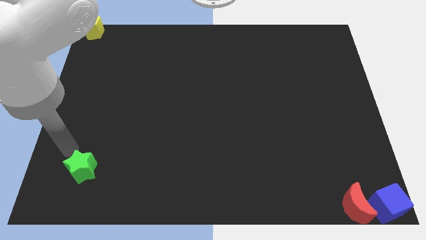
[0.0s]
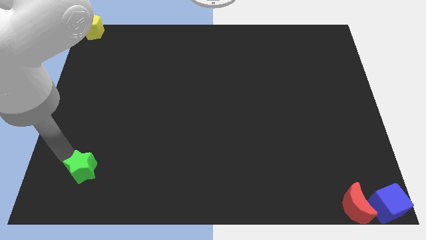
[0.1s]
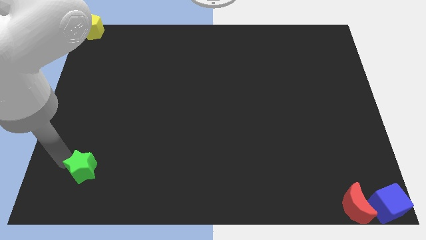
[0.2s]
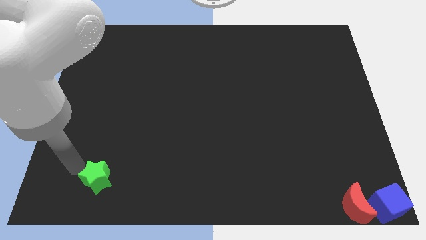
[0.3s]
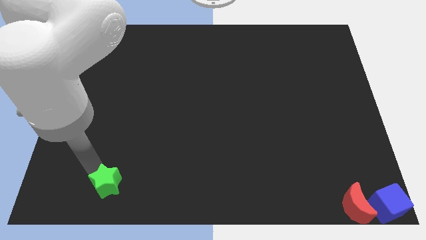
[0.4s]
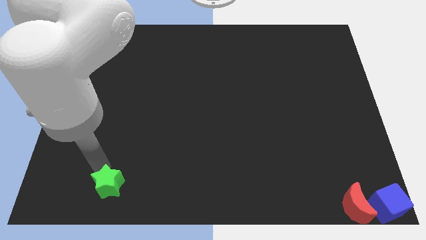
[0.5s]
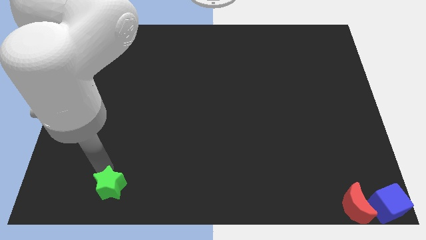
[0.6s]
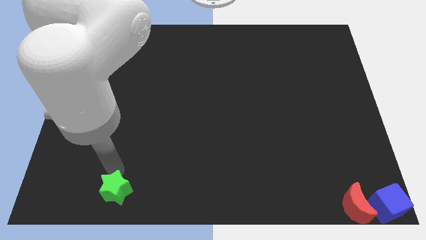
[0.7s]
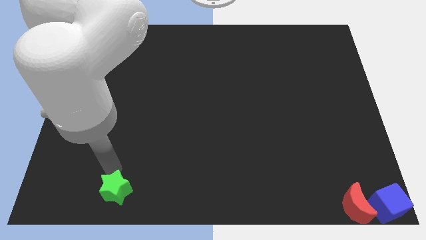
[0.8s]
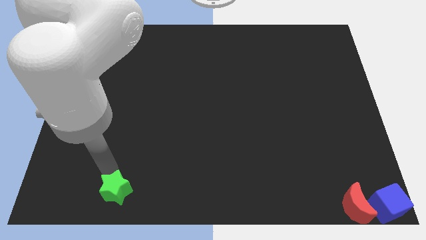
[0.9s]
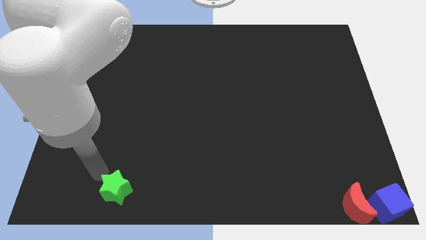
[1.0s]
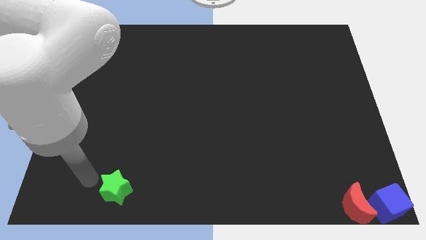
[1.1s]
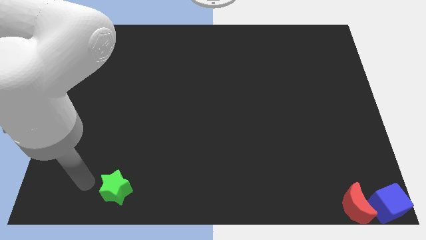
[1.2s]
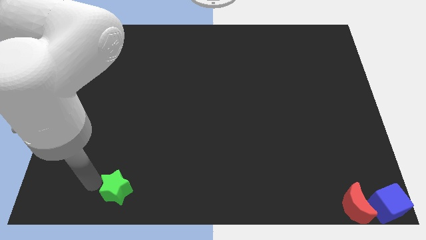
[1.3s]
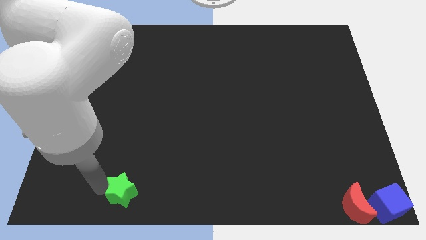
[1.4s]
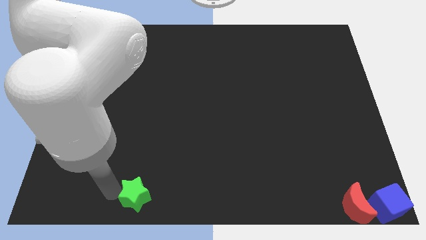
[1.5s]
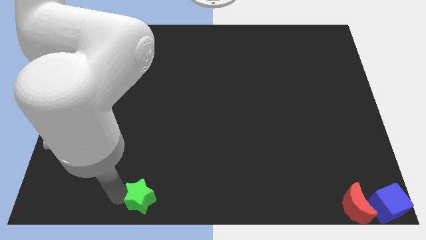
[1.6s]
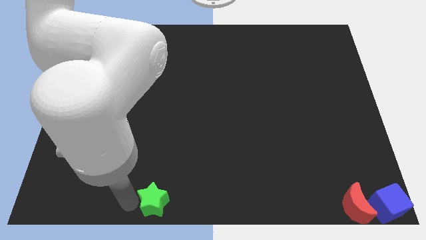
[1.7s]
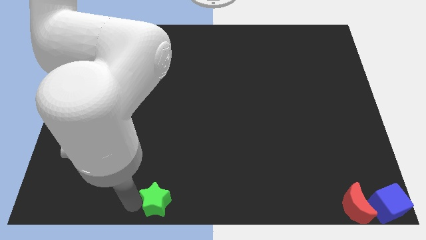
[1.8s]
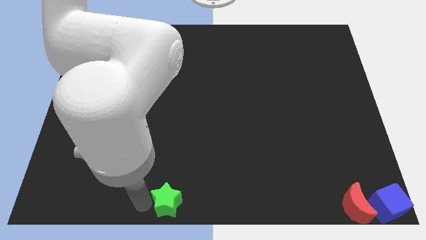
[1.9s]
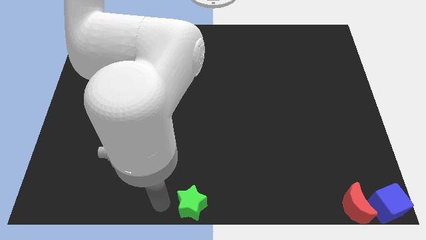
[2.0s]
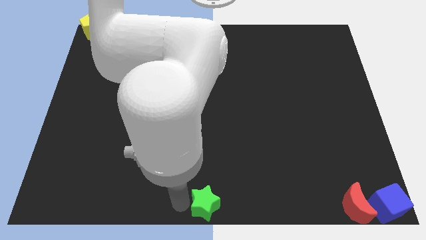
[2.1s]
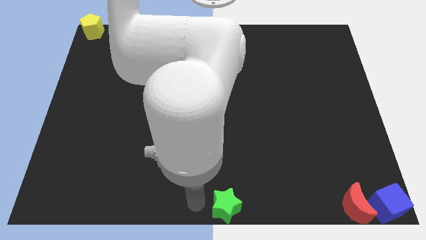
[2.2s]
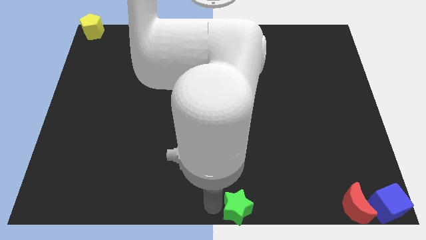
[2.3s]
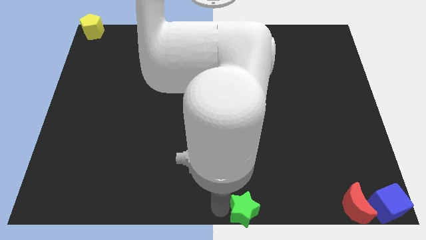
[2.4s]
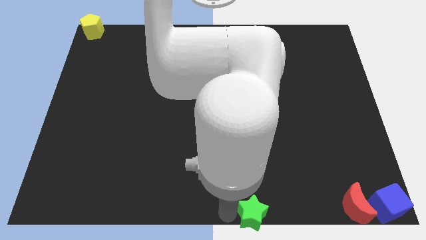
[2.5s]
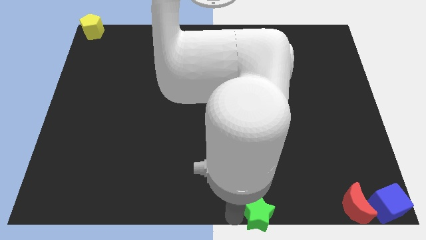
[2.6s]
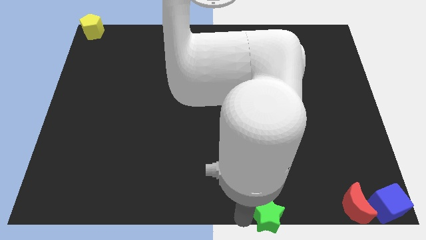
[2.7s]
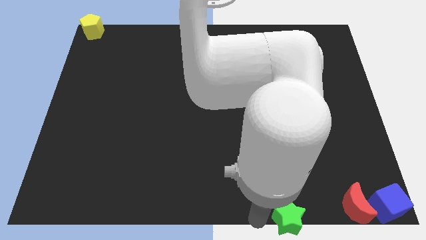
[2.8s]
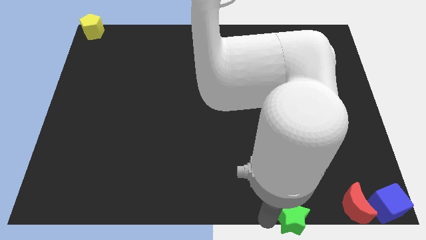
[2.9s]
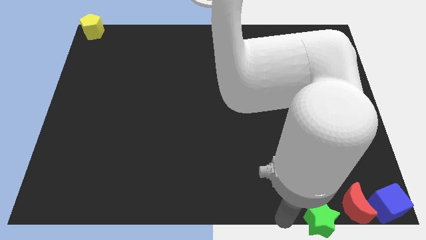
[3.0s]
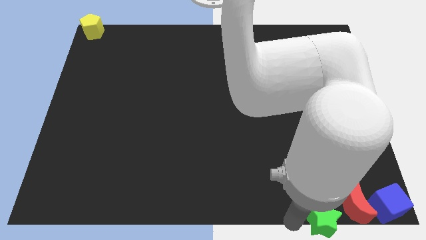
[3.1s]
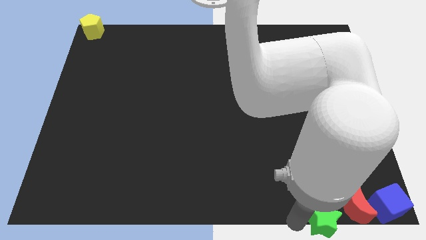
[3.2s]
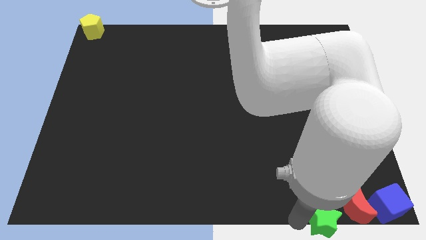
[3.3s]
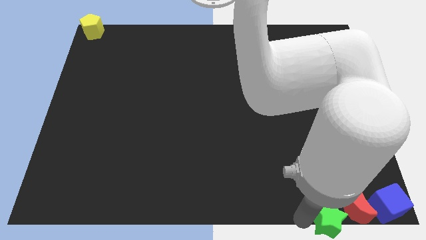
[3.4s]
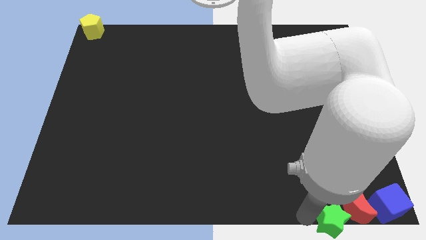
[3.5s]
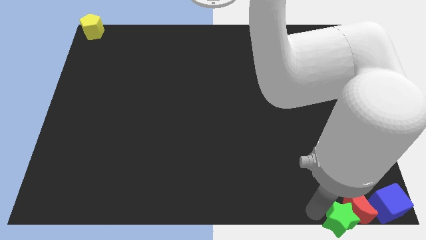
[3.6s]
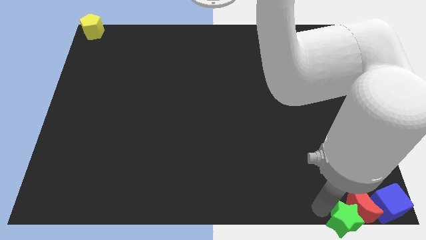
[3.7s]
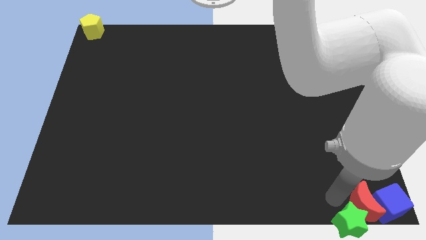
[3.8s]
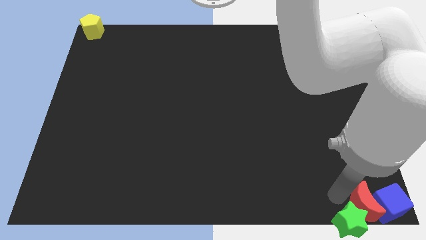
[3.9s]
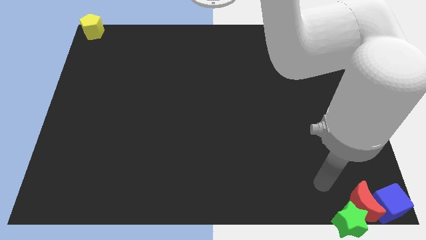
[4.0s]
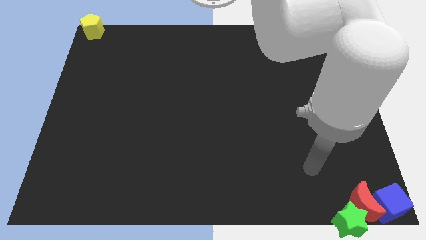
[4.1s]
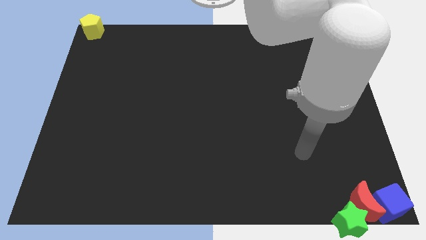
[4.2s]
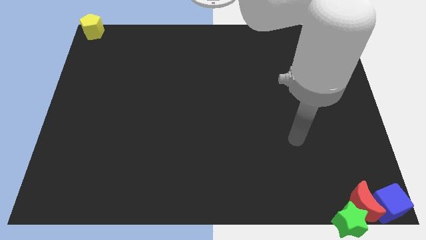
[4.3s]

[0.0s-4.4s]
move the green star close to the group of blocks

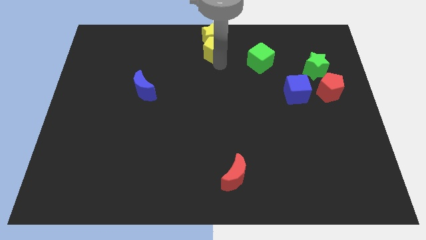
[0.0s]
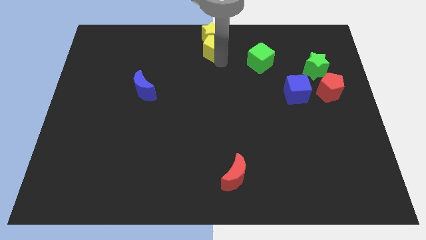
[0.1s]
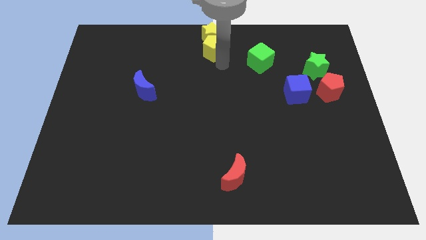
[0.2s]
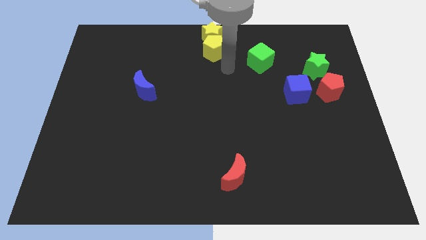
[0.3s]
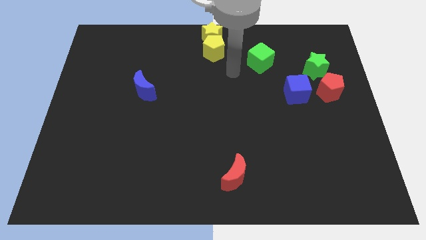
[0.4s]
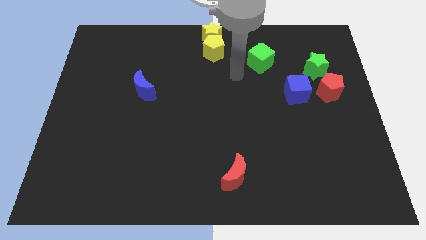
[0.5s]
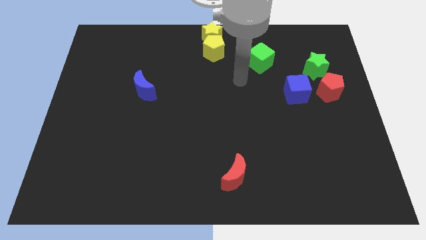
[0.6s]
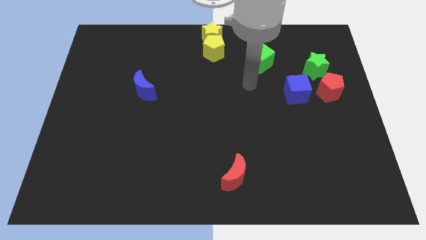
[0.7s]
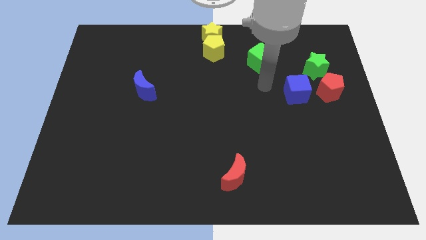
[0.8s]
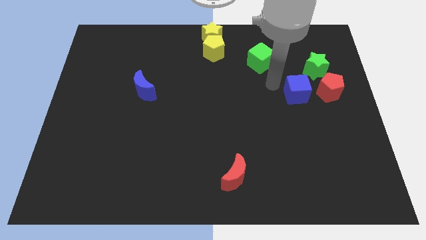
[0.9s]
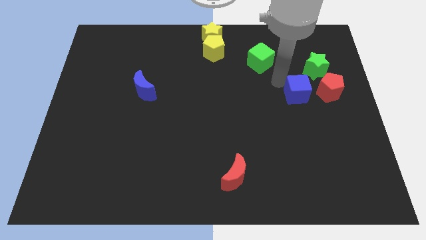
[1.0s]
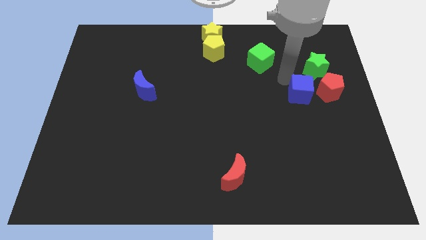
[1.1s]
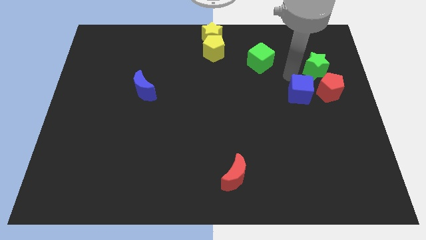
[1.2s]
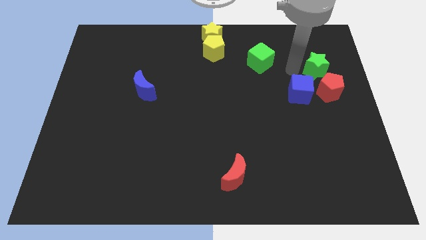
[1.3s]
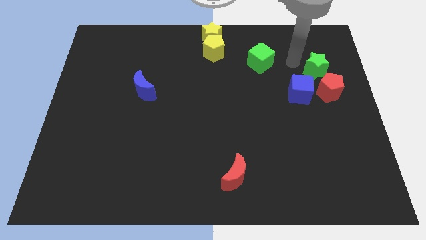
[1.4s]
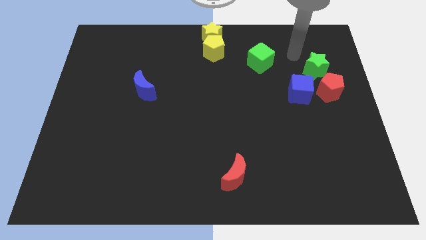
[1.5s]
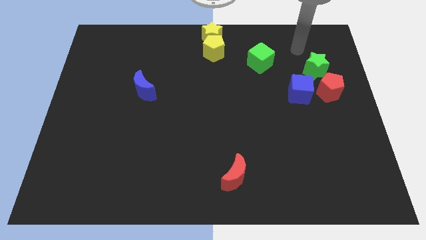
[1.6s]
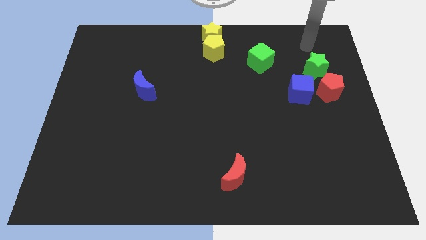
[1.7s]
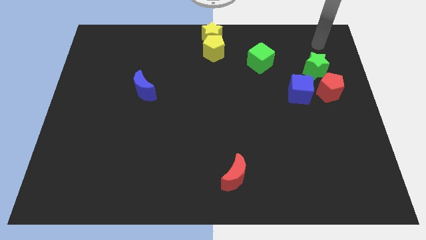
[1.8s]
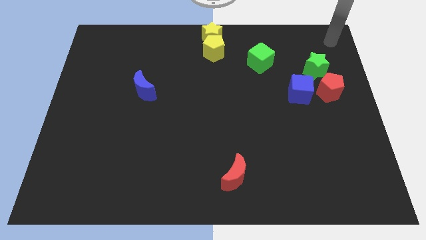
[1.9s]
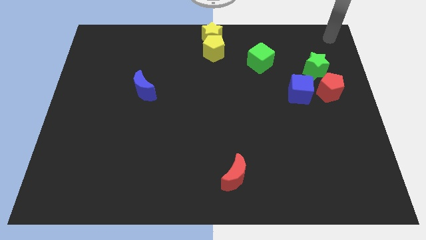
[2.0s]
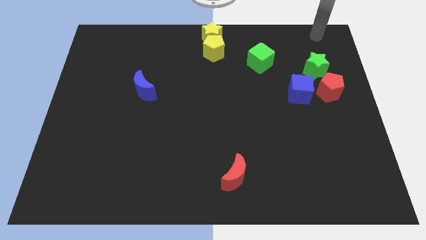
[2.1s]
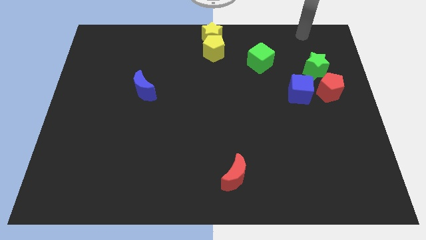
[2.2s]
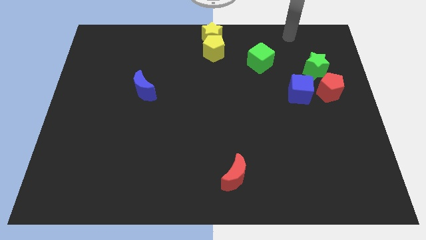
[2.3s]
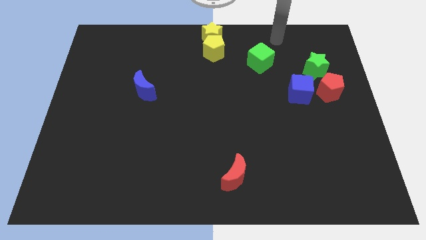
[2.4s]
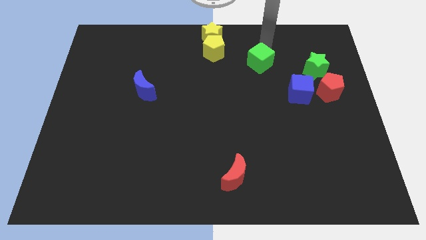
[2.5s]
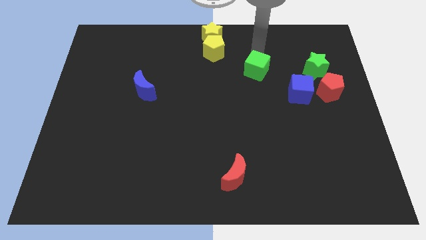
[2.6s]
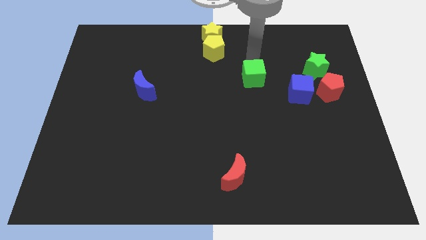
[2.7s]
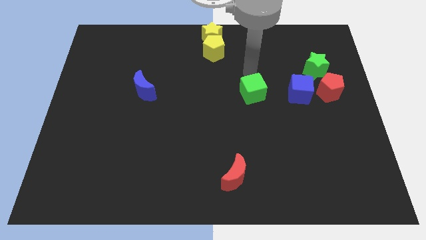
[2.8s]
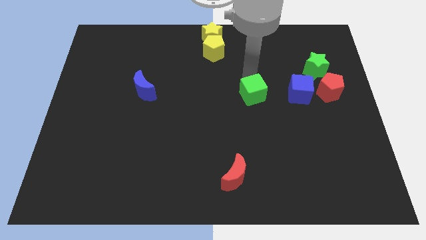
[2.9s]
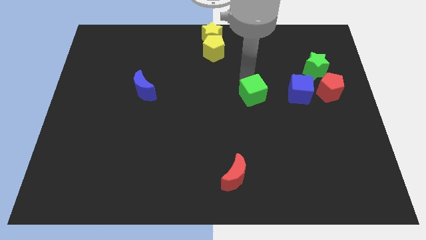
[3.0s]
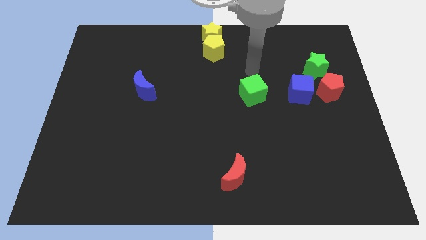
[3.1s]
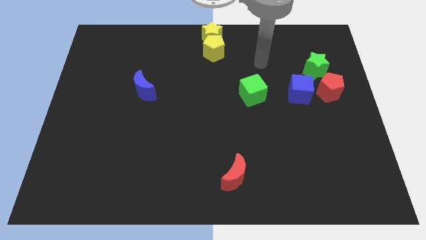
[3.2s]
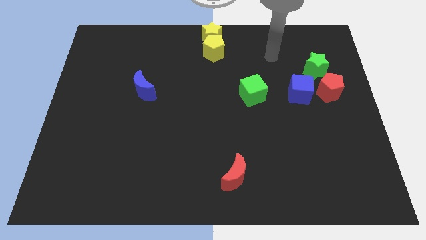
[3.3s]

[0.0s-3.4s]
push the green cube horizontally at the left side of the blue cube

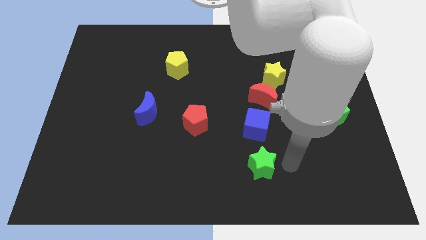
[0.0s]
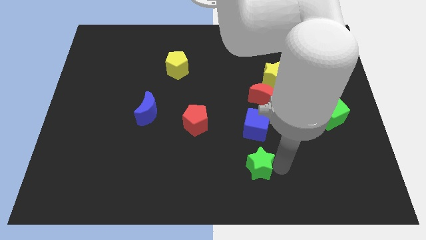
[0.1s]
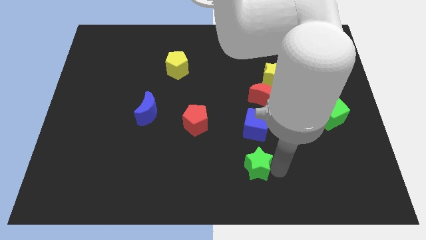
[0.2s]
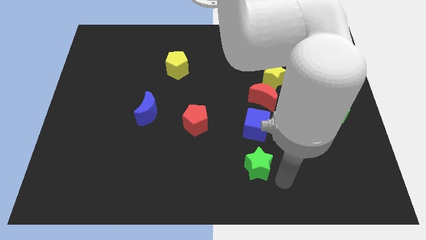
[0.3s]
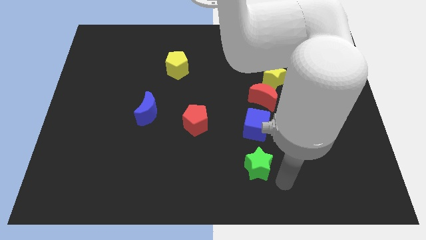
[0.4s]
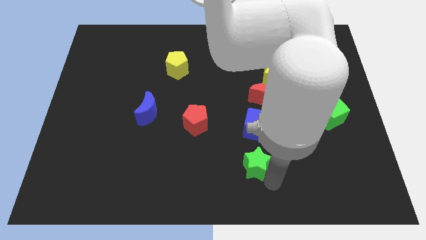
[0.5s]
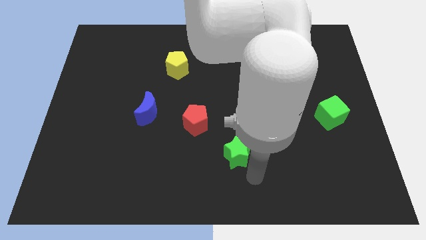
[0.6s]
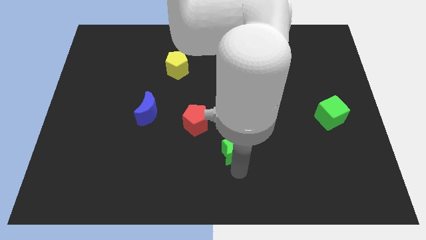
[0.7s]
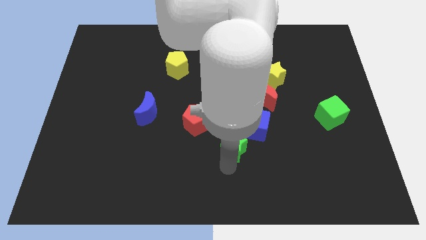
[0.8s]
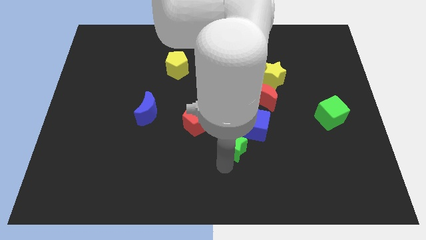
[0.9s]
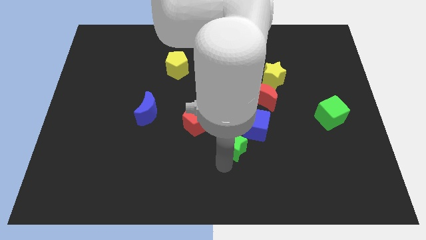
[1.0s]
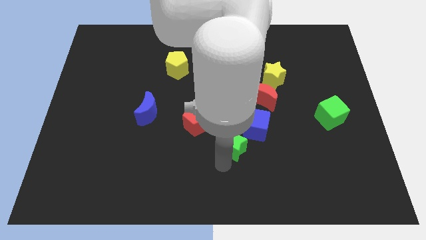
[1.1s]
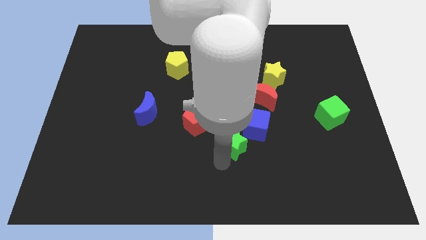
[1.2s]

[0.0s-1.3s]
push the green star at the bottom left of the blue cube
